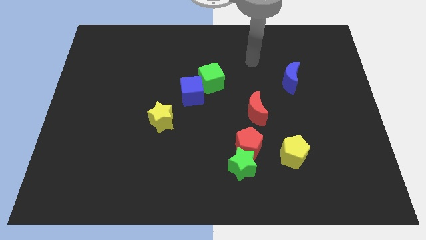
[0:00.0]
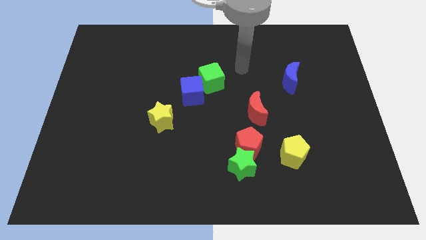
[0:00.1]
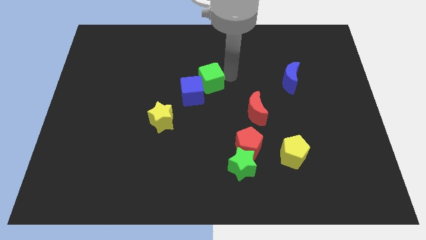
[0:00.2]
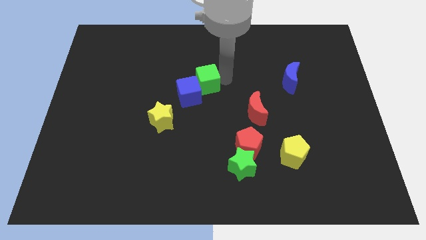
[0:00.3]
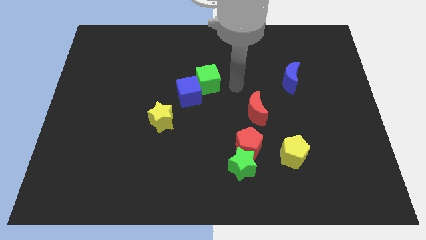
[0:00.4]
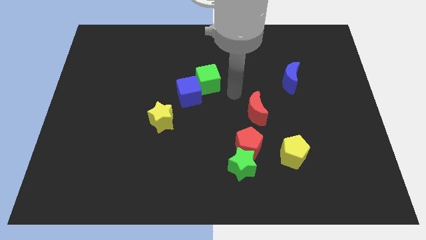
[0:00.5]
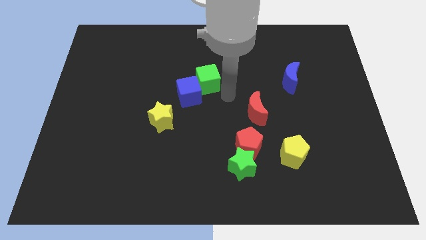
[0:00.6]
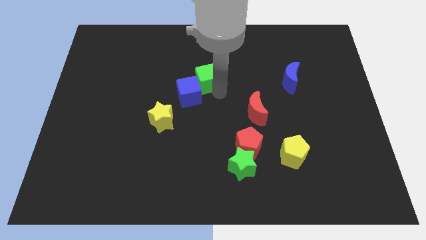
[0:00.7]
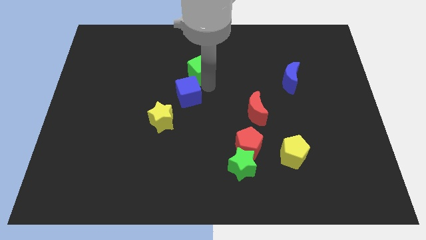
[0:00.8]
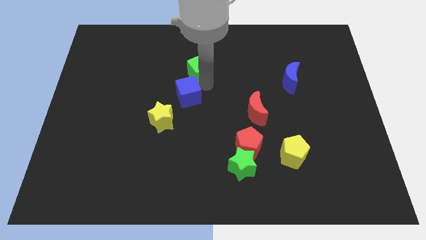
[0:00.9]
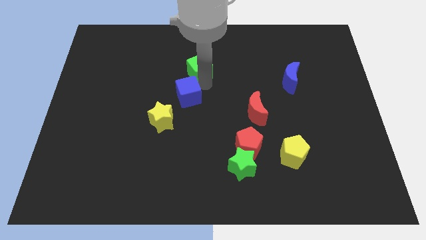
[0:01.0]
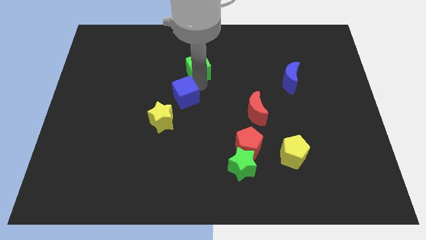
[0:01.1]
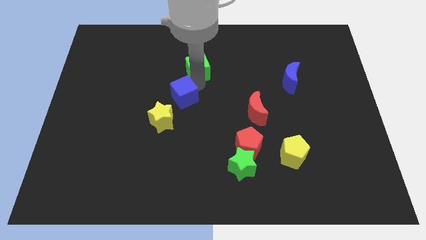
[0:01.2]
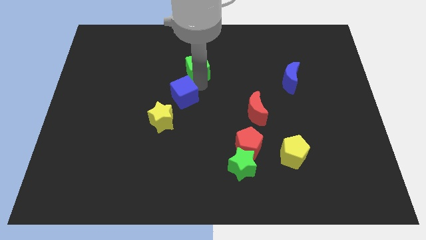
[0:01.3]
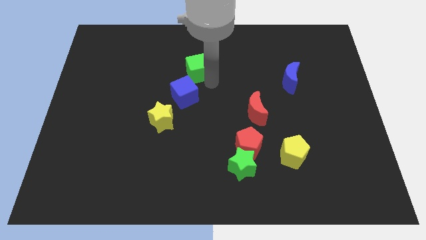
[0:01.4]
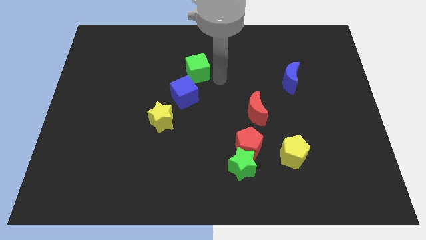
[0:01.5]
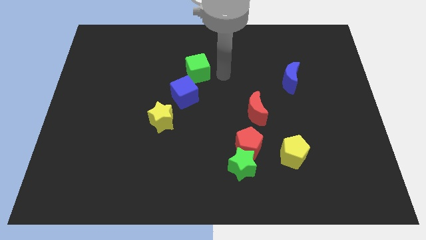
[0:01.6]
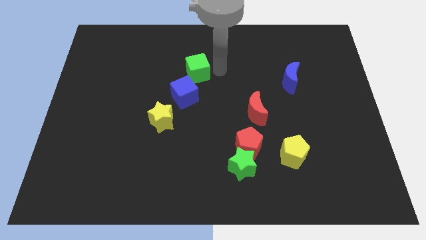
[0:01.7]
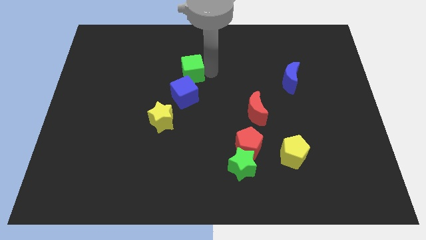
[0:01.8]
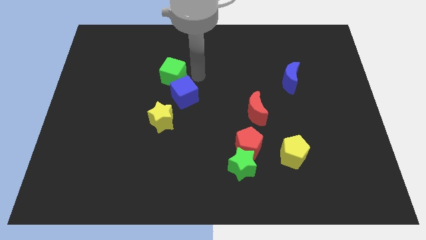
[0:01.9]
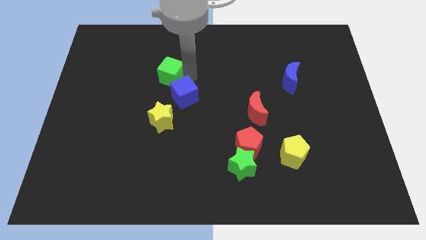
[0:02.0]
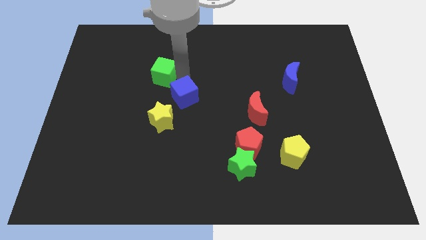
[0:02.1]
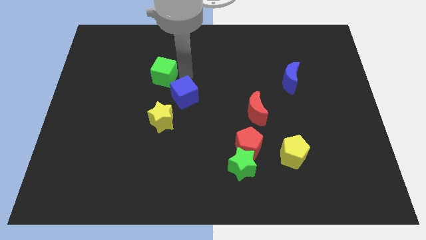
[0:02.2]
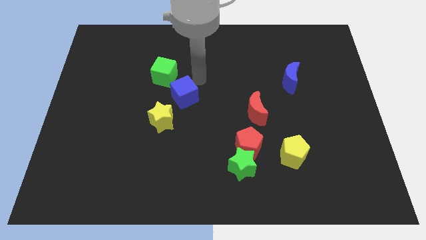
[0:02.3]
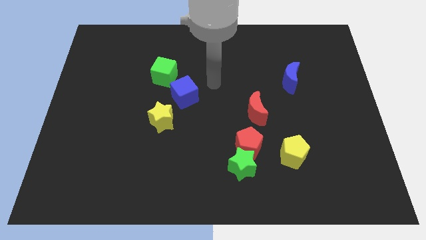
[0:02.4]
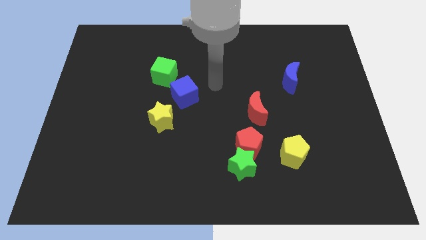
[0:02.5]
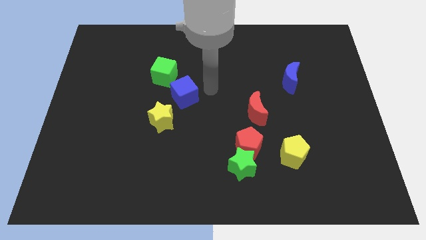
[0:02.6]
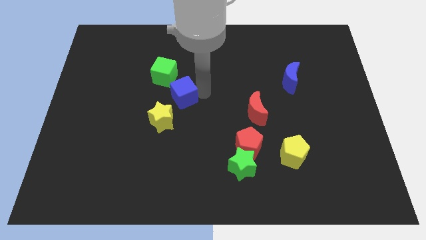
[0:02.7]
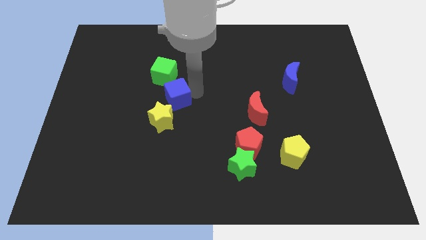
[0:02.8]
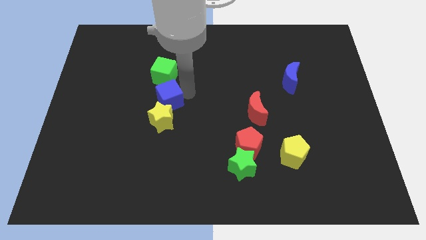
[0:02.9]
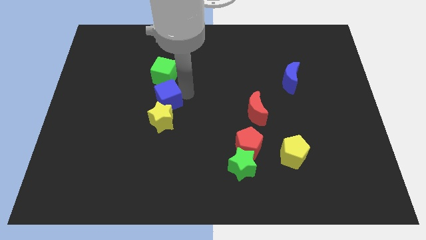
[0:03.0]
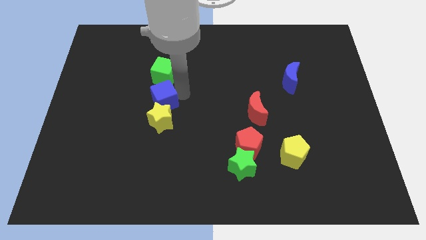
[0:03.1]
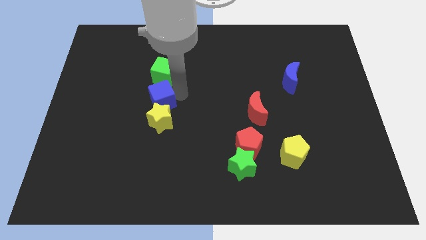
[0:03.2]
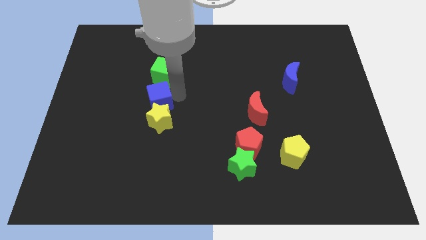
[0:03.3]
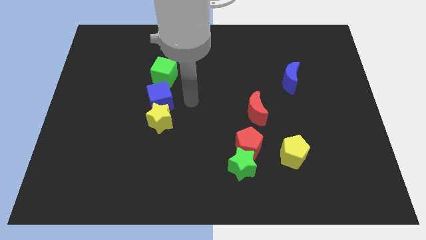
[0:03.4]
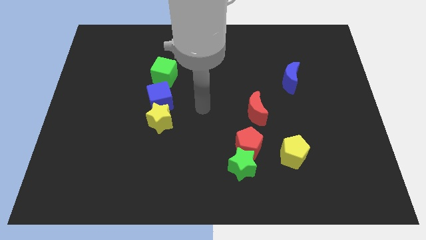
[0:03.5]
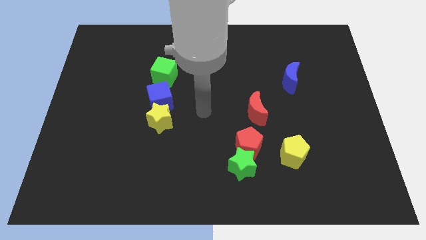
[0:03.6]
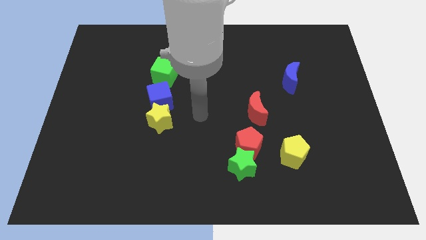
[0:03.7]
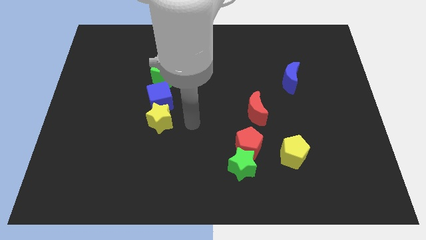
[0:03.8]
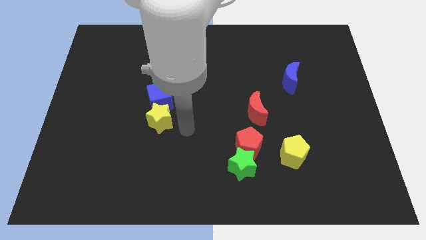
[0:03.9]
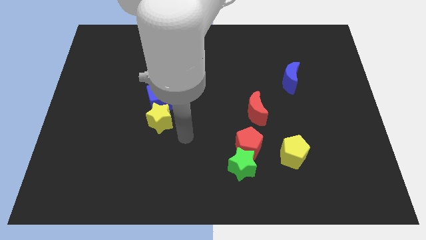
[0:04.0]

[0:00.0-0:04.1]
move the green and blue cubes above the yellow star

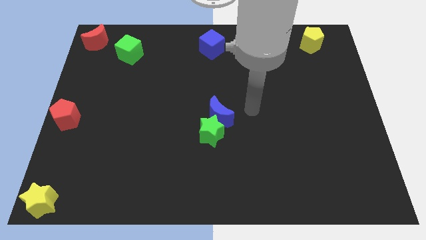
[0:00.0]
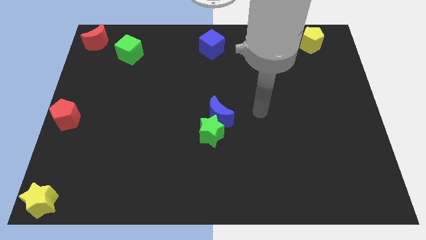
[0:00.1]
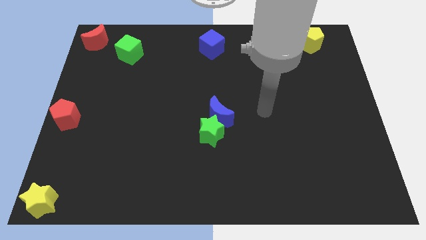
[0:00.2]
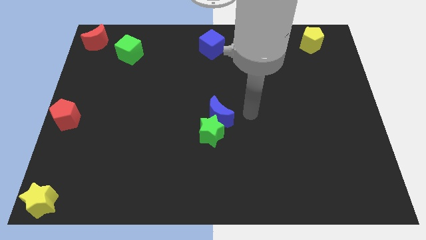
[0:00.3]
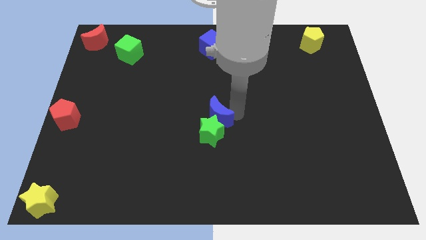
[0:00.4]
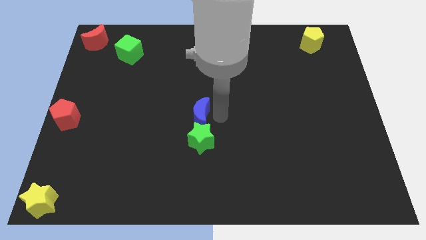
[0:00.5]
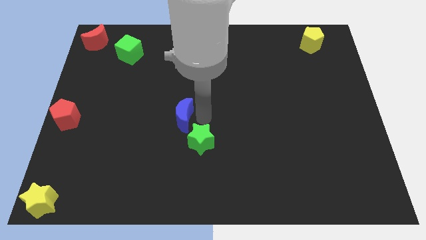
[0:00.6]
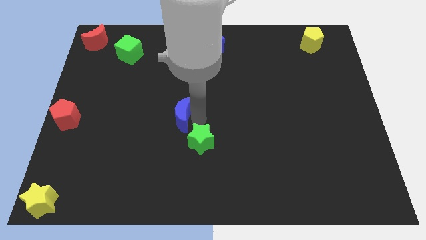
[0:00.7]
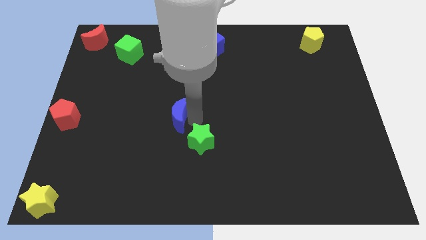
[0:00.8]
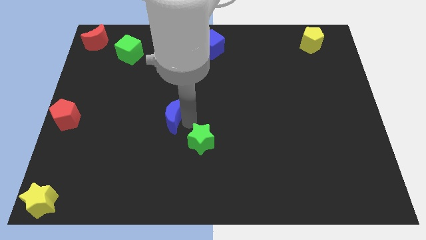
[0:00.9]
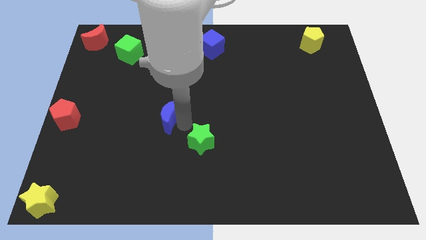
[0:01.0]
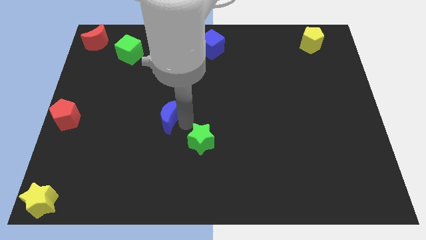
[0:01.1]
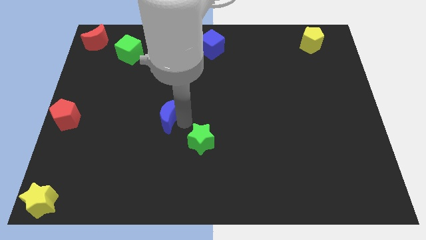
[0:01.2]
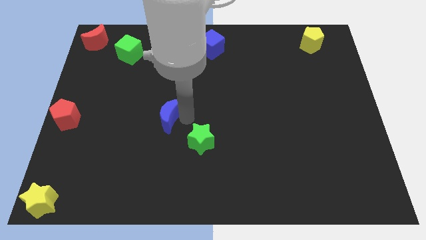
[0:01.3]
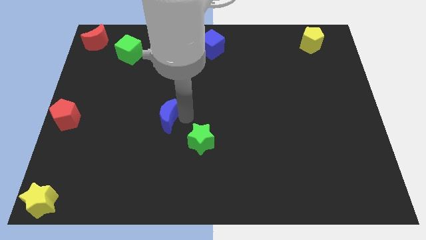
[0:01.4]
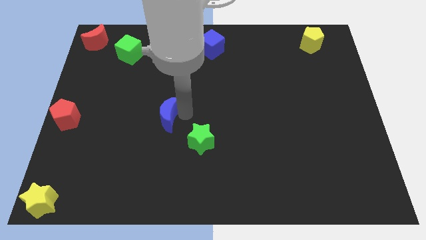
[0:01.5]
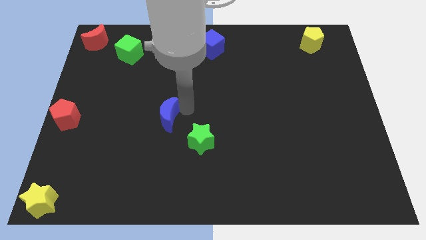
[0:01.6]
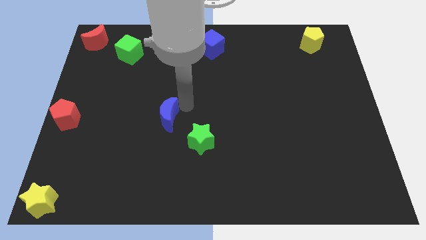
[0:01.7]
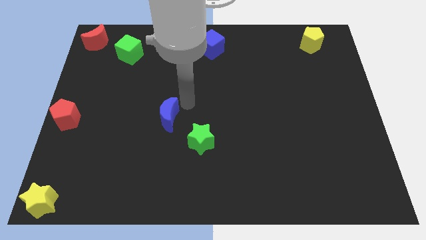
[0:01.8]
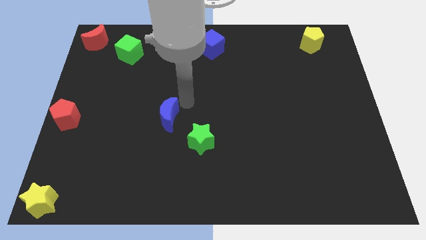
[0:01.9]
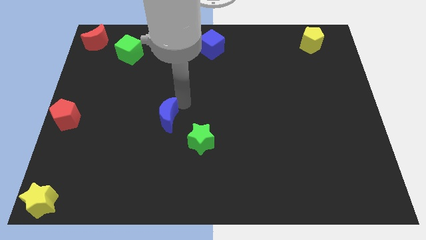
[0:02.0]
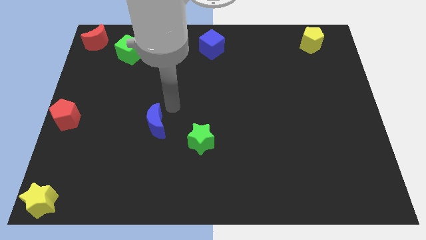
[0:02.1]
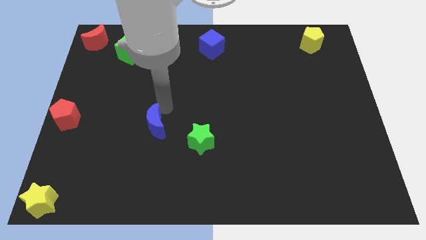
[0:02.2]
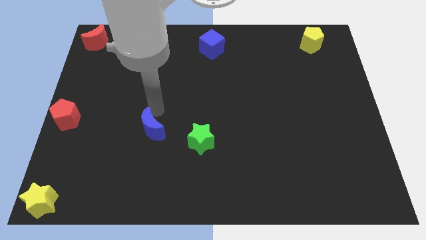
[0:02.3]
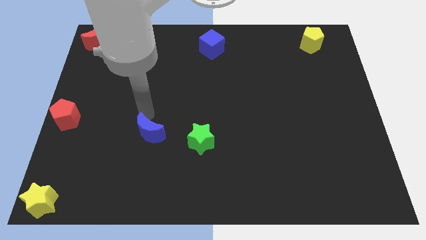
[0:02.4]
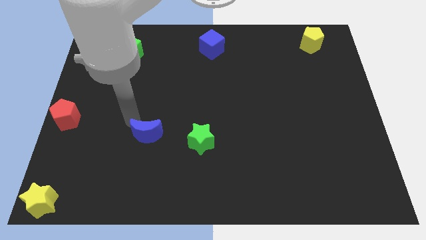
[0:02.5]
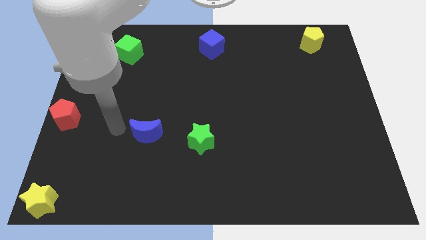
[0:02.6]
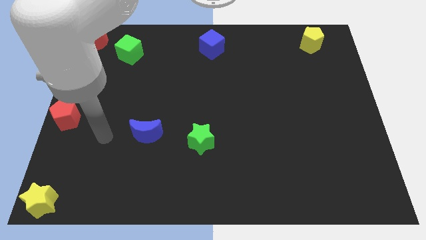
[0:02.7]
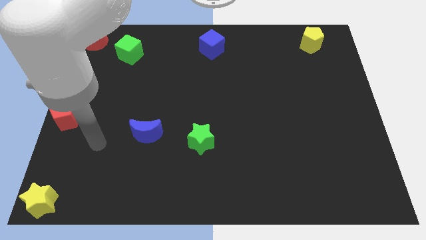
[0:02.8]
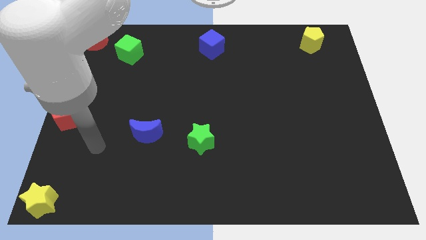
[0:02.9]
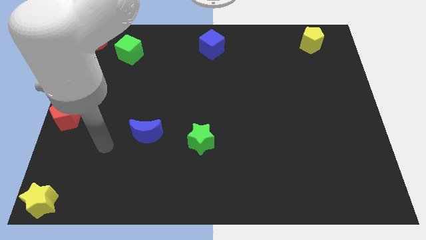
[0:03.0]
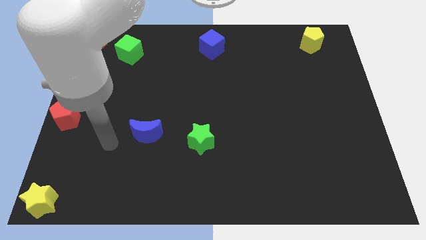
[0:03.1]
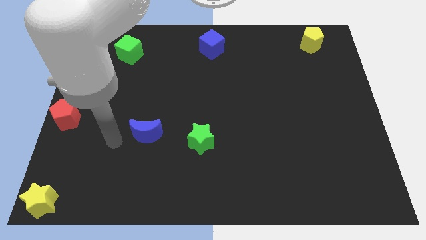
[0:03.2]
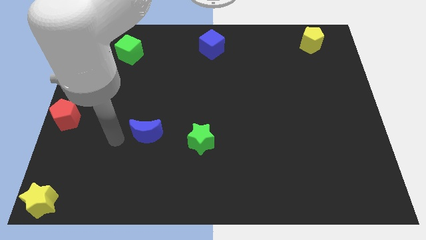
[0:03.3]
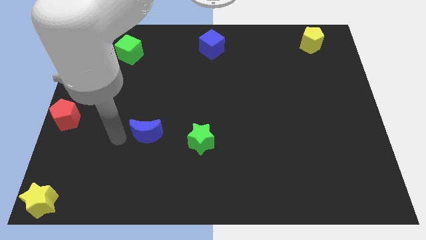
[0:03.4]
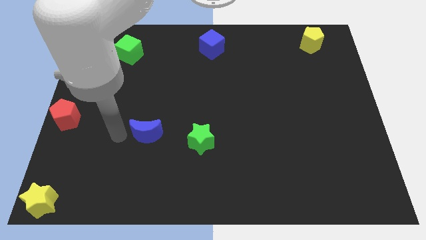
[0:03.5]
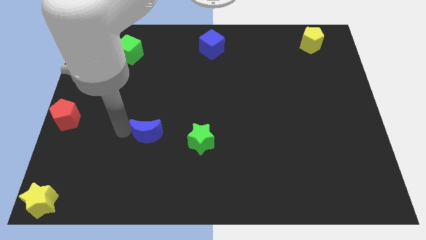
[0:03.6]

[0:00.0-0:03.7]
separate the blue moon from the green star

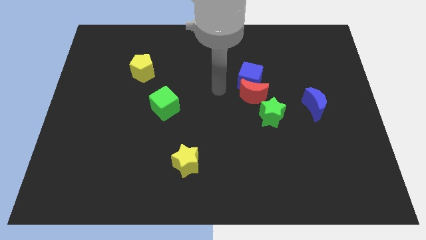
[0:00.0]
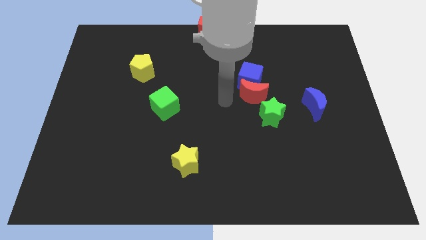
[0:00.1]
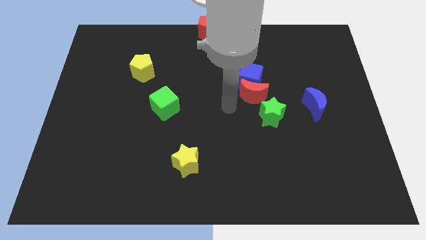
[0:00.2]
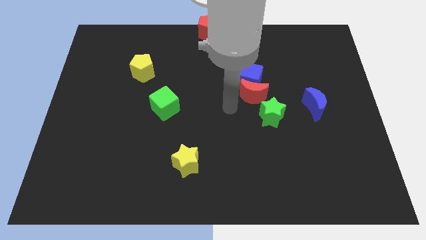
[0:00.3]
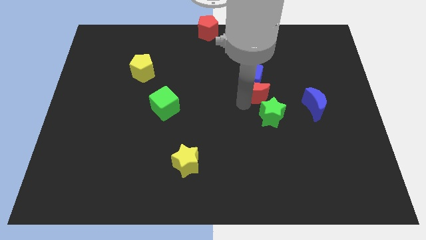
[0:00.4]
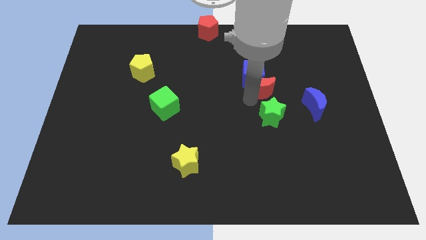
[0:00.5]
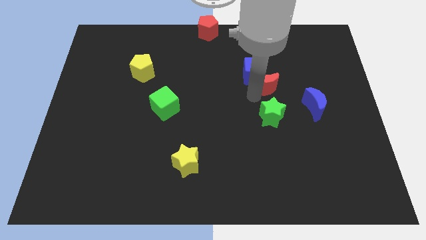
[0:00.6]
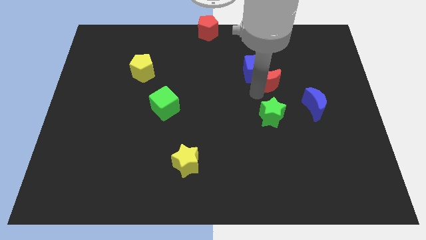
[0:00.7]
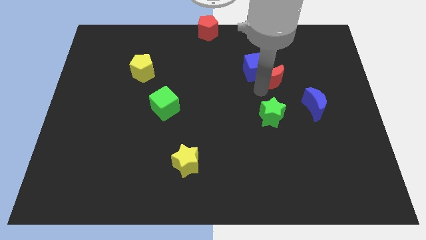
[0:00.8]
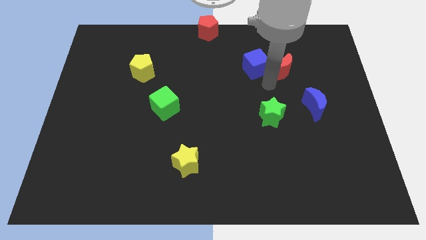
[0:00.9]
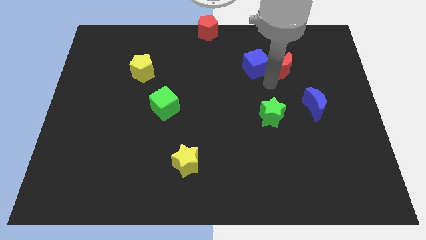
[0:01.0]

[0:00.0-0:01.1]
move the red moon towards the top right of the board
